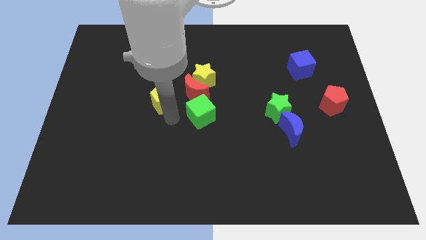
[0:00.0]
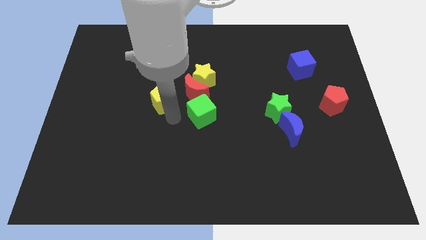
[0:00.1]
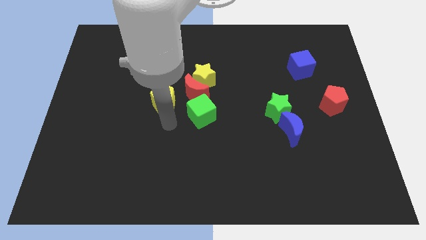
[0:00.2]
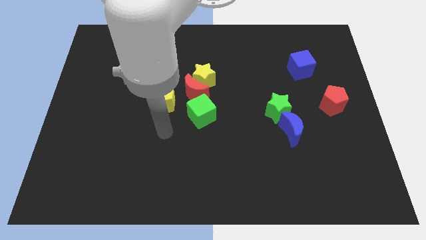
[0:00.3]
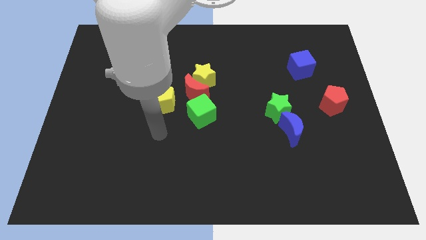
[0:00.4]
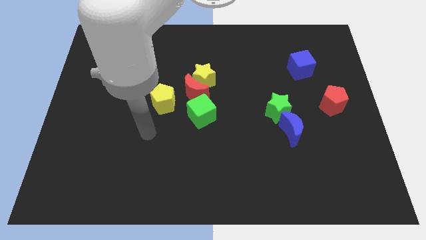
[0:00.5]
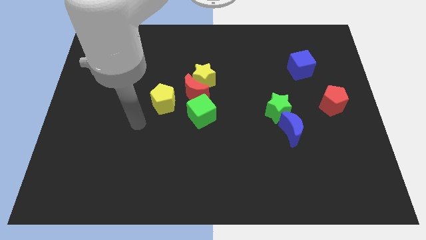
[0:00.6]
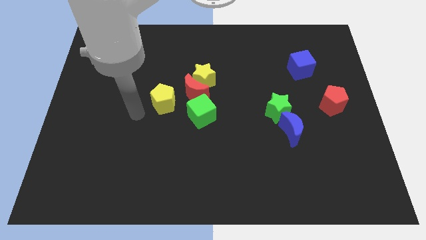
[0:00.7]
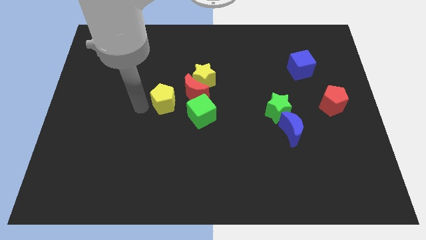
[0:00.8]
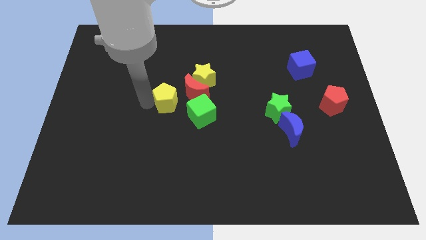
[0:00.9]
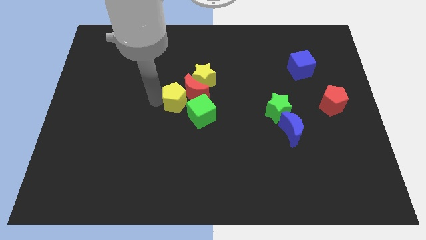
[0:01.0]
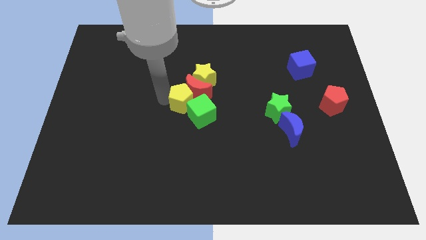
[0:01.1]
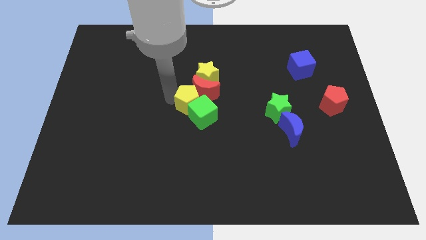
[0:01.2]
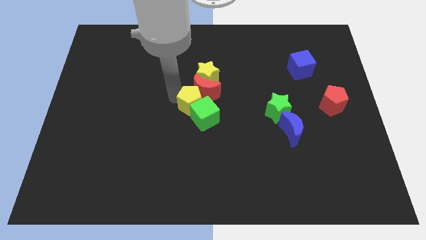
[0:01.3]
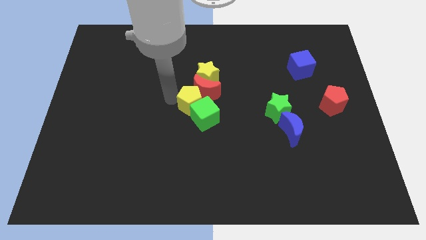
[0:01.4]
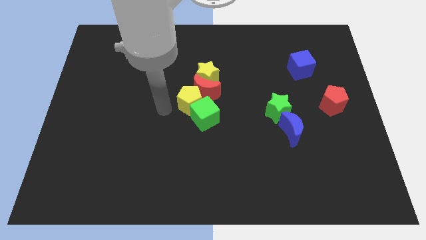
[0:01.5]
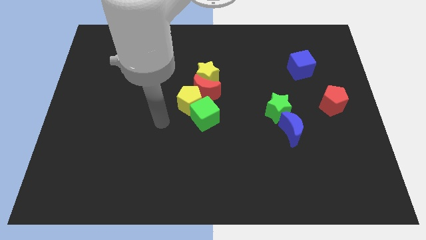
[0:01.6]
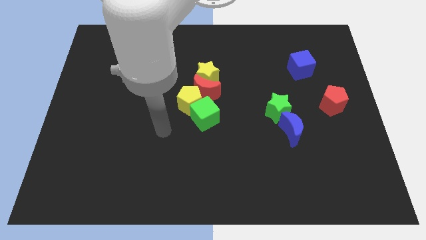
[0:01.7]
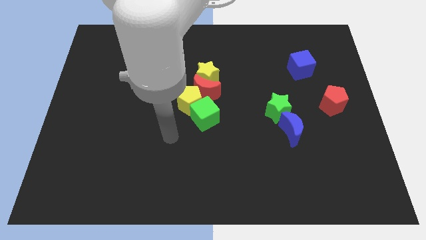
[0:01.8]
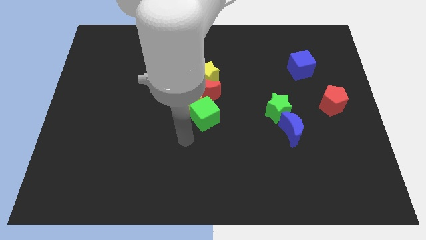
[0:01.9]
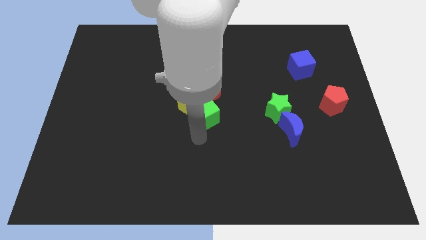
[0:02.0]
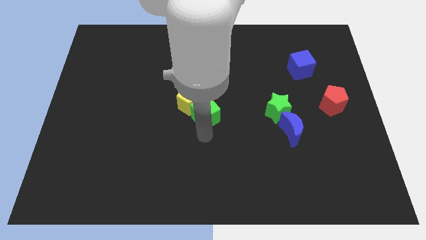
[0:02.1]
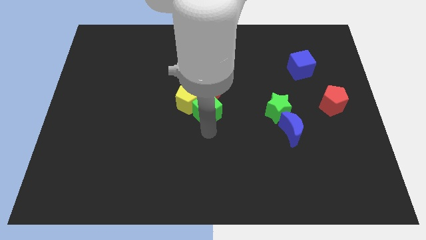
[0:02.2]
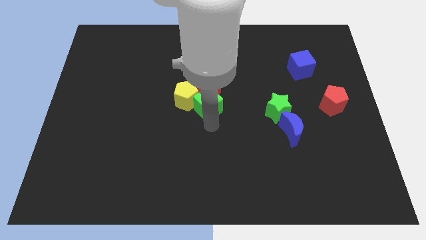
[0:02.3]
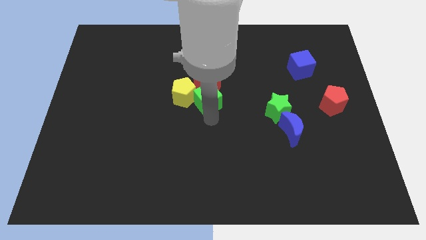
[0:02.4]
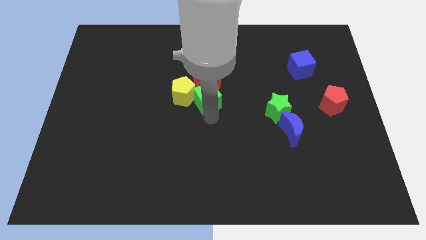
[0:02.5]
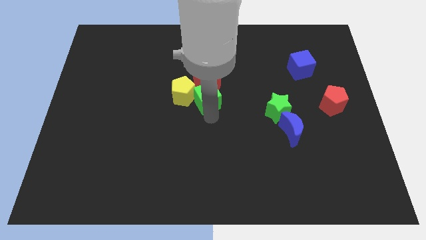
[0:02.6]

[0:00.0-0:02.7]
place green cube below red crescent

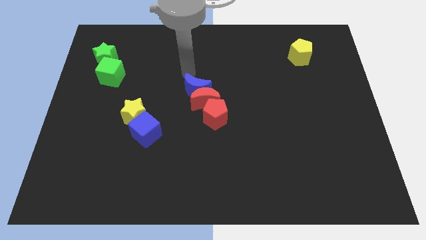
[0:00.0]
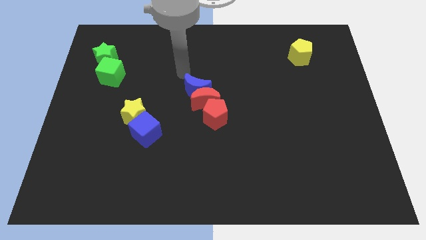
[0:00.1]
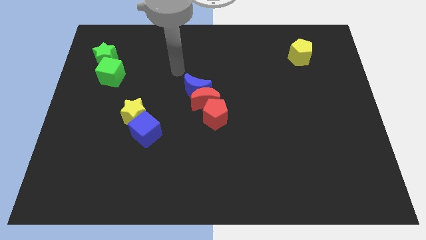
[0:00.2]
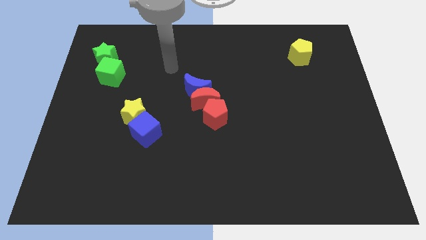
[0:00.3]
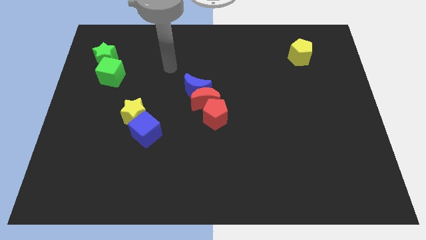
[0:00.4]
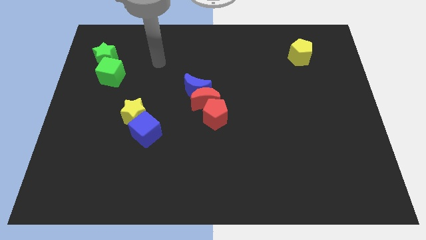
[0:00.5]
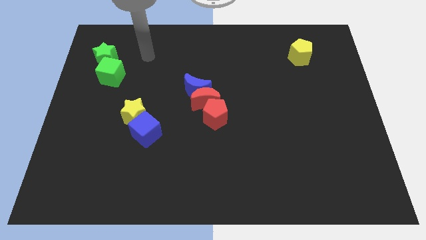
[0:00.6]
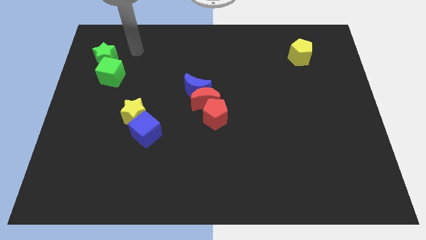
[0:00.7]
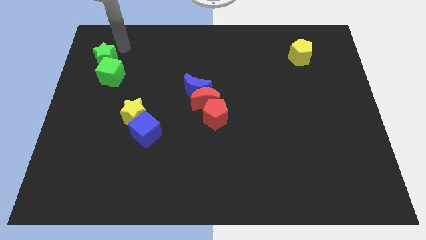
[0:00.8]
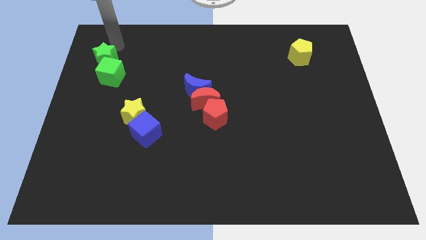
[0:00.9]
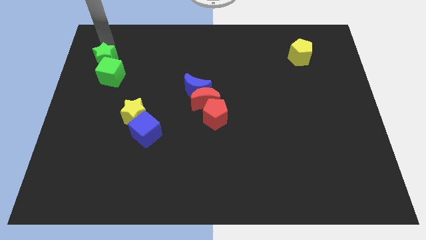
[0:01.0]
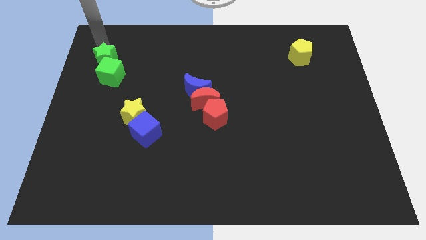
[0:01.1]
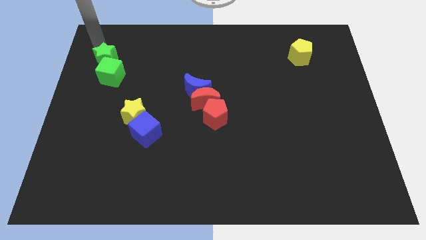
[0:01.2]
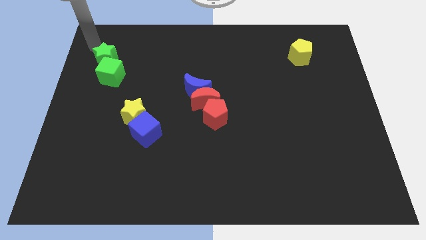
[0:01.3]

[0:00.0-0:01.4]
move your arm away from blue moon

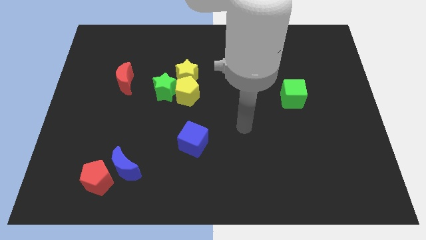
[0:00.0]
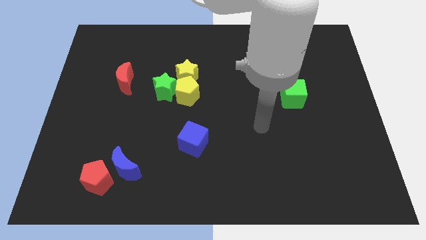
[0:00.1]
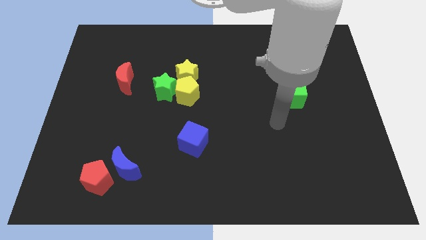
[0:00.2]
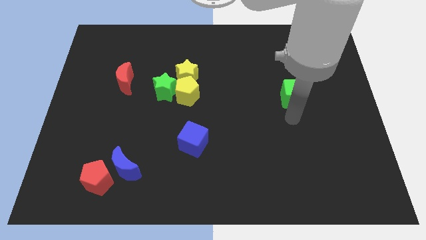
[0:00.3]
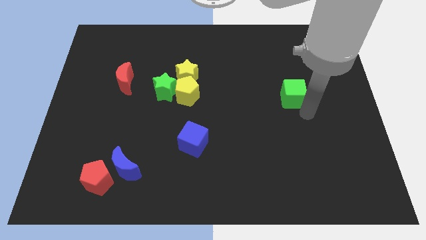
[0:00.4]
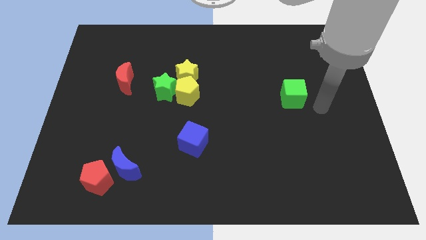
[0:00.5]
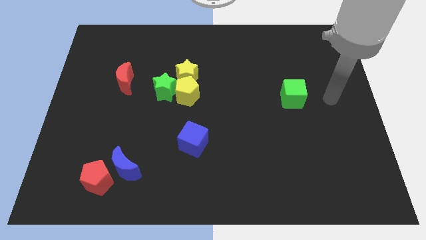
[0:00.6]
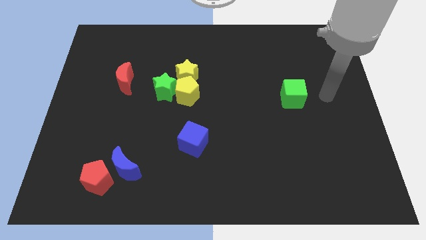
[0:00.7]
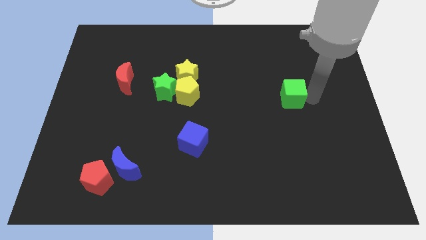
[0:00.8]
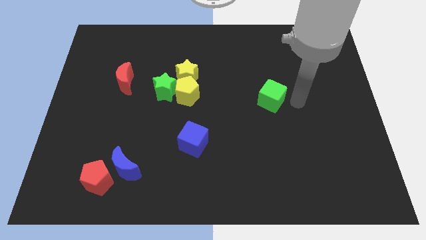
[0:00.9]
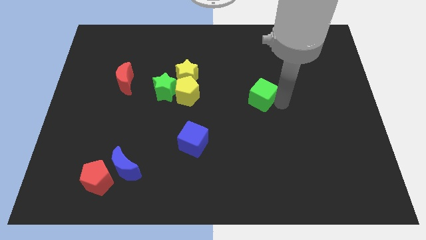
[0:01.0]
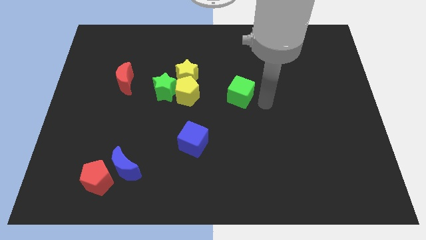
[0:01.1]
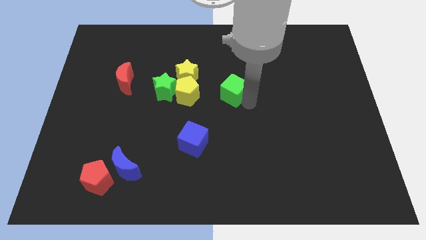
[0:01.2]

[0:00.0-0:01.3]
move the green cube slightly to the left of the board

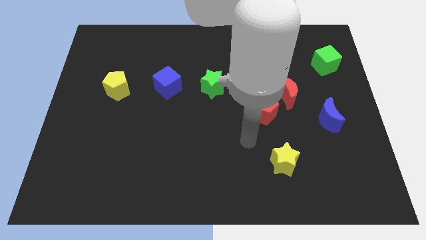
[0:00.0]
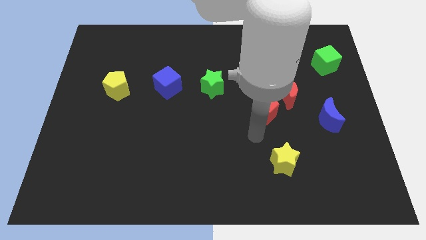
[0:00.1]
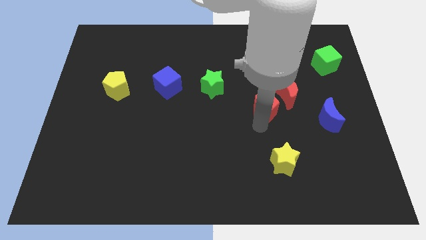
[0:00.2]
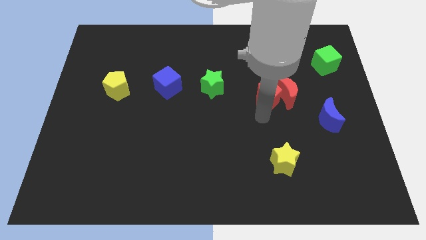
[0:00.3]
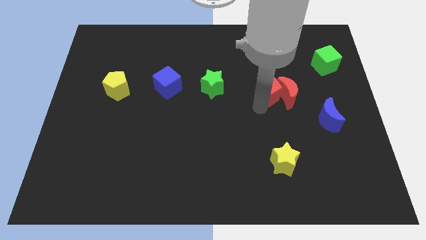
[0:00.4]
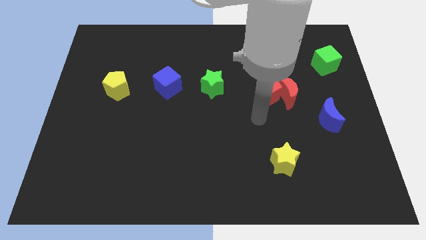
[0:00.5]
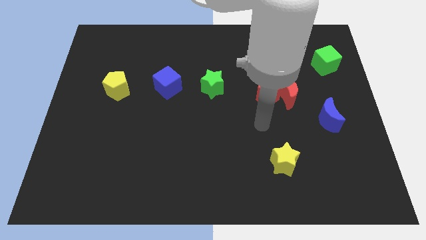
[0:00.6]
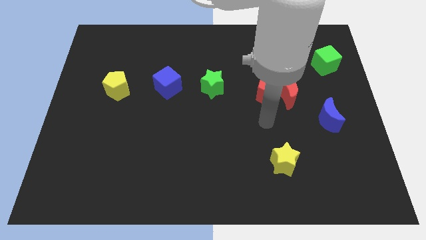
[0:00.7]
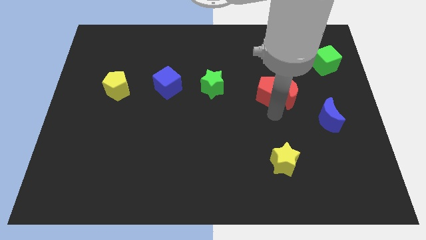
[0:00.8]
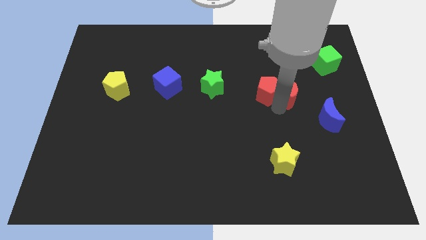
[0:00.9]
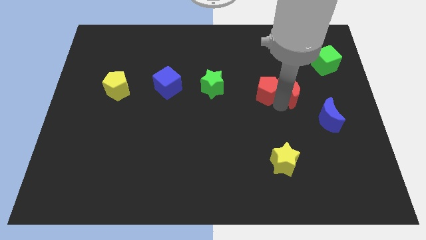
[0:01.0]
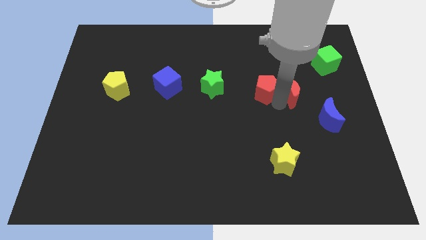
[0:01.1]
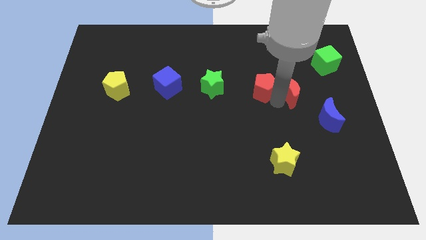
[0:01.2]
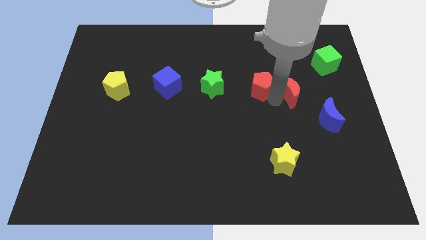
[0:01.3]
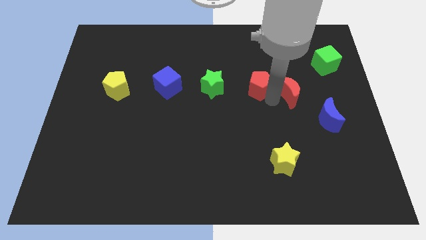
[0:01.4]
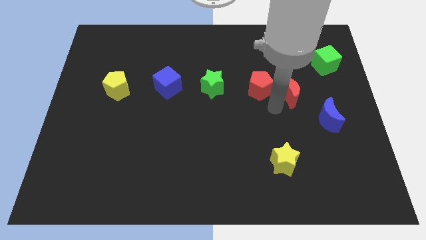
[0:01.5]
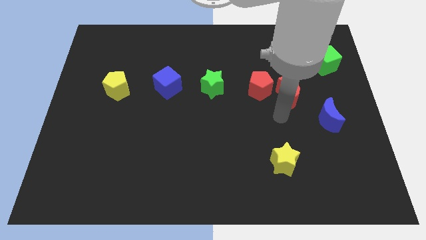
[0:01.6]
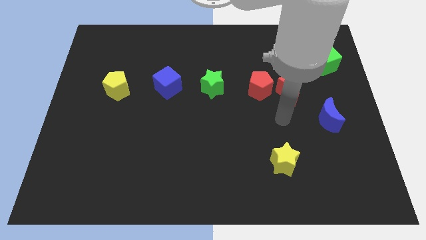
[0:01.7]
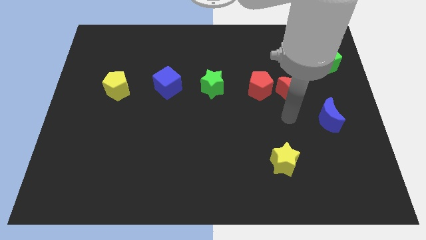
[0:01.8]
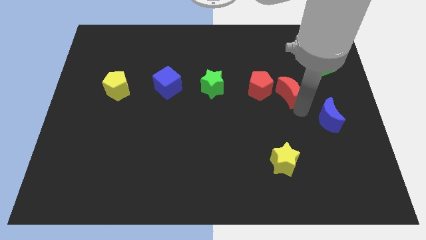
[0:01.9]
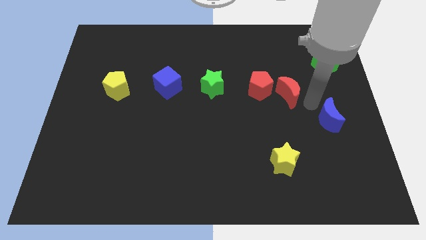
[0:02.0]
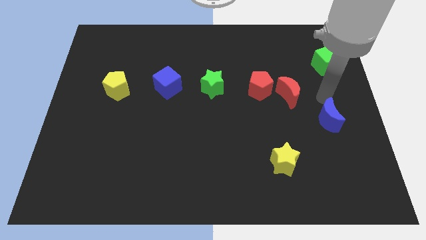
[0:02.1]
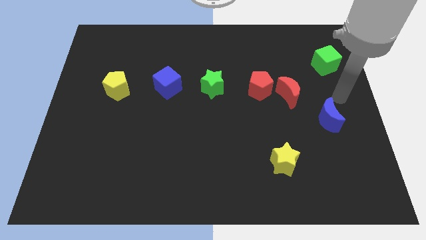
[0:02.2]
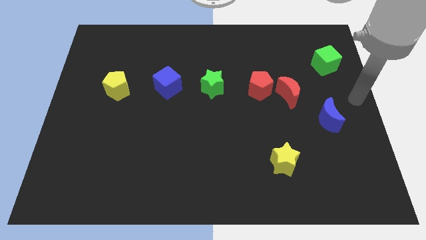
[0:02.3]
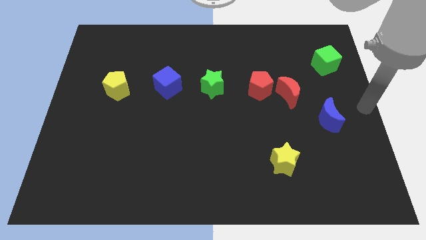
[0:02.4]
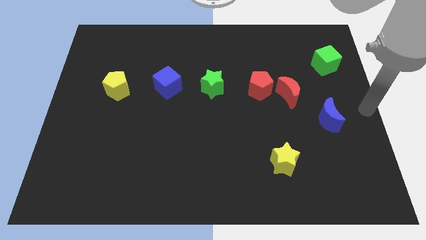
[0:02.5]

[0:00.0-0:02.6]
place the red pentagon to the right side of green star

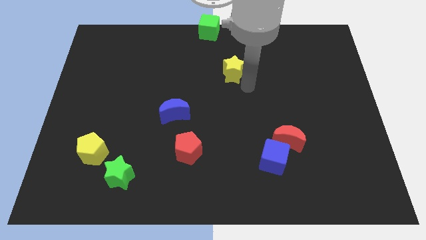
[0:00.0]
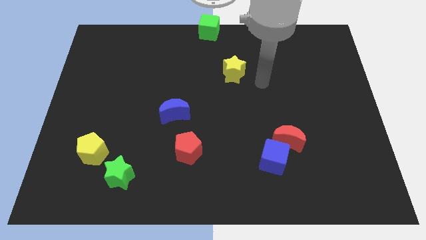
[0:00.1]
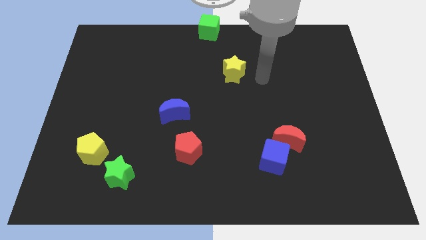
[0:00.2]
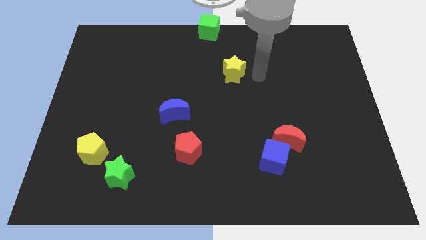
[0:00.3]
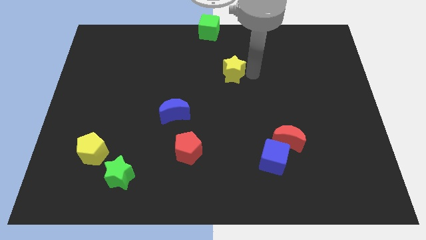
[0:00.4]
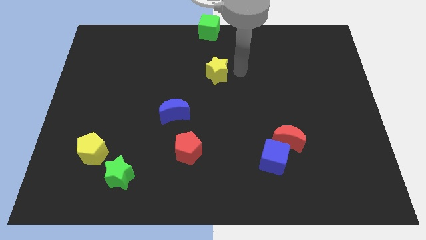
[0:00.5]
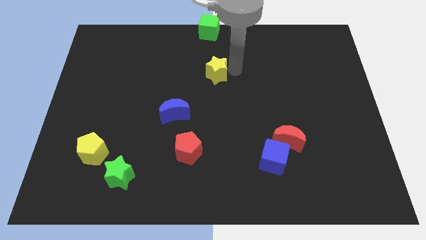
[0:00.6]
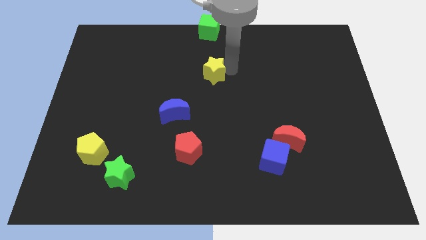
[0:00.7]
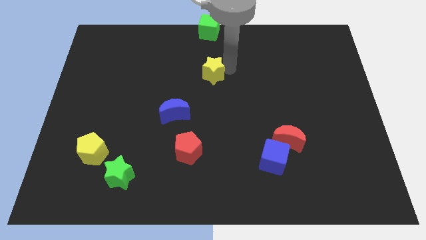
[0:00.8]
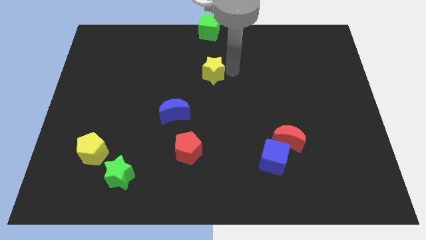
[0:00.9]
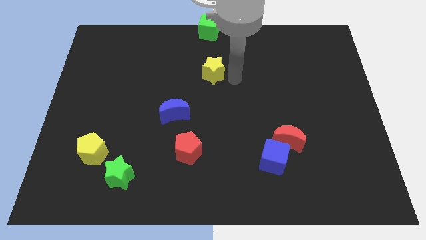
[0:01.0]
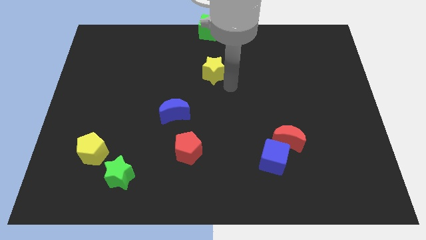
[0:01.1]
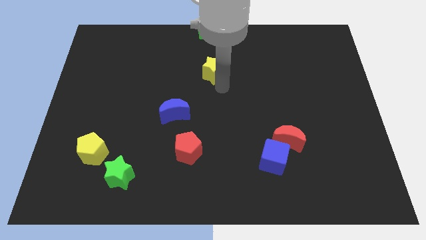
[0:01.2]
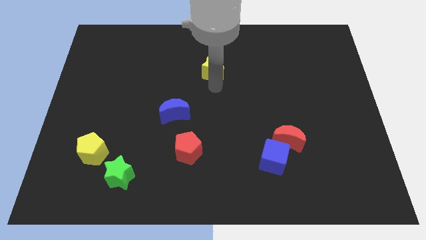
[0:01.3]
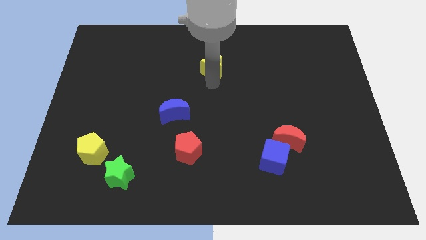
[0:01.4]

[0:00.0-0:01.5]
push the yellow star to the left
